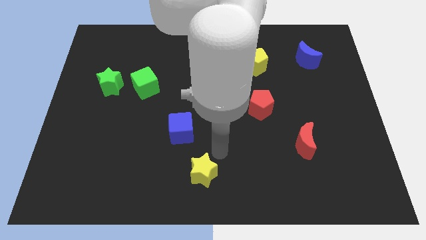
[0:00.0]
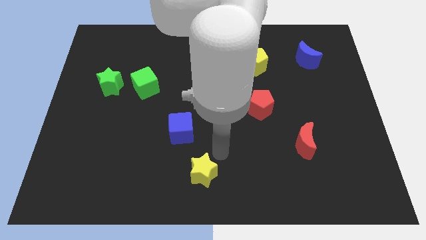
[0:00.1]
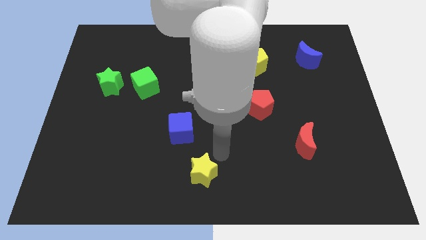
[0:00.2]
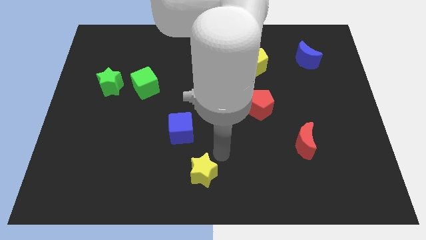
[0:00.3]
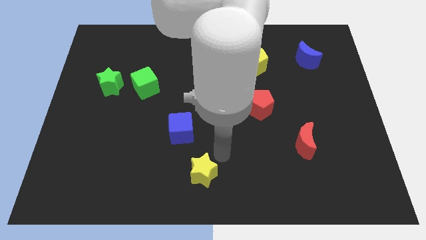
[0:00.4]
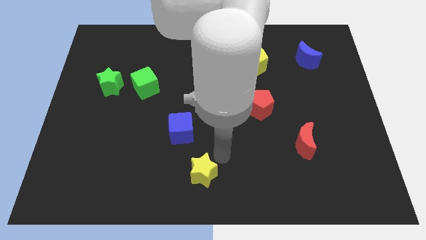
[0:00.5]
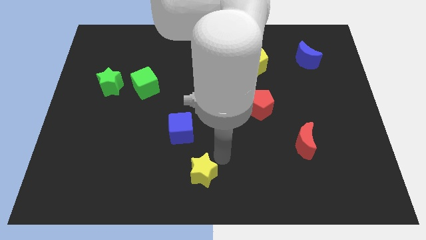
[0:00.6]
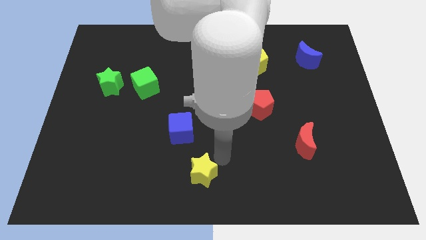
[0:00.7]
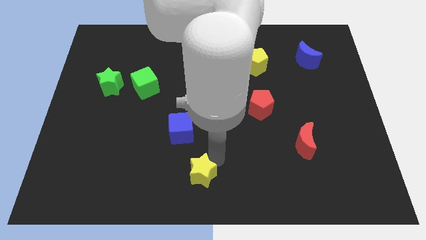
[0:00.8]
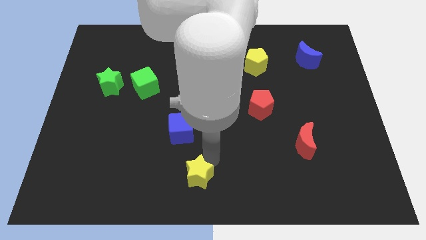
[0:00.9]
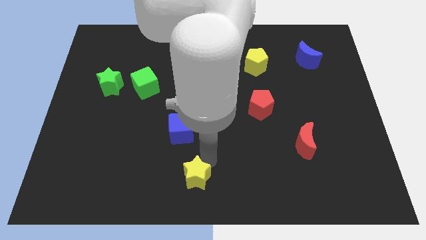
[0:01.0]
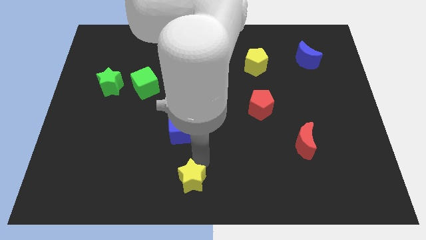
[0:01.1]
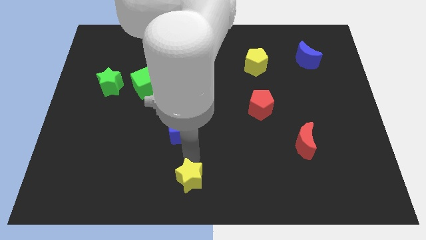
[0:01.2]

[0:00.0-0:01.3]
move yellow star to the bottom of blue cube

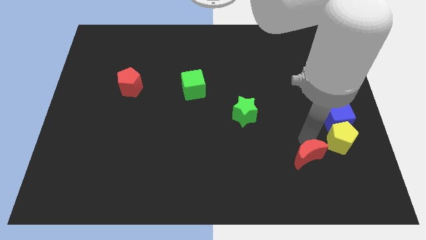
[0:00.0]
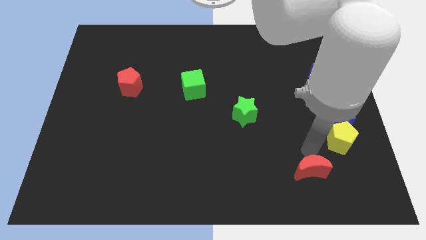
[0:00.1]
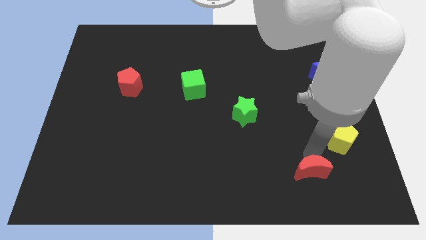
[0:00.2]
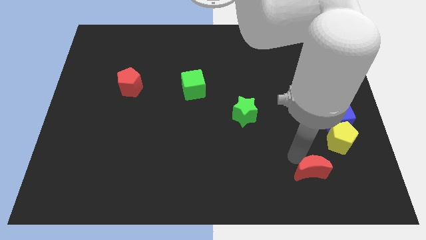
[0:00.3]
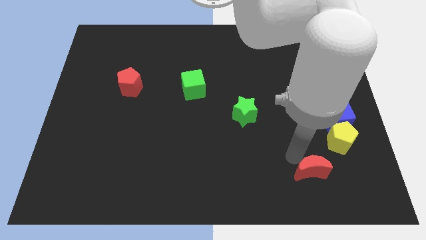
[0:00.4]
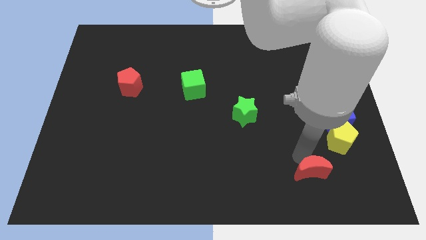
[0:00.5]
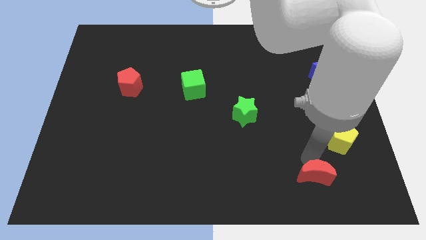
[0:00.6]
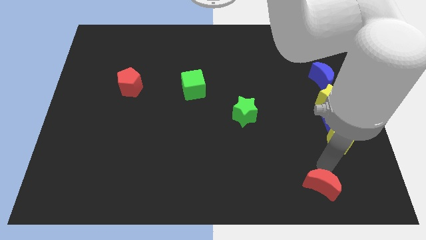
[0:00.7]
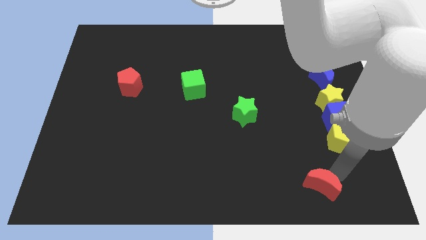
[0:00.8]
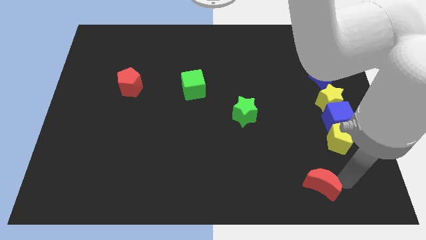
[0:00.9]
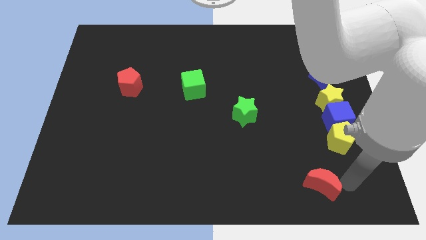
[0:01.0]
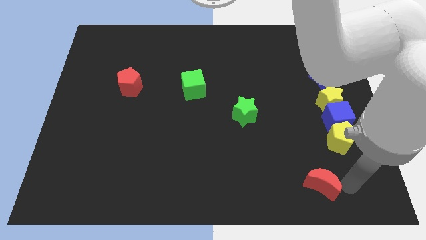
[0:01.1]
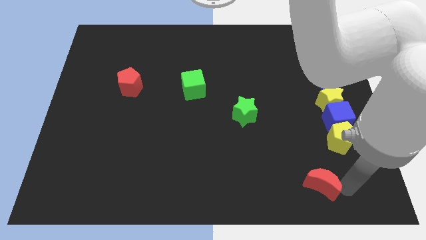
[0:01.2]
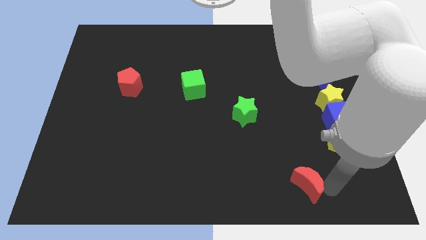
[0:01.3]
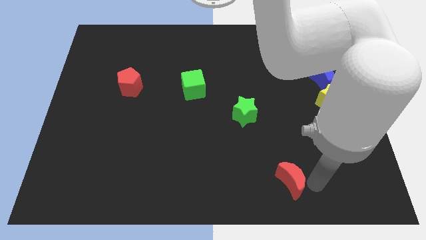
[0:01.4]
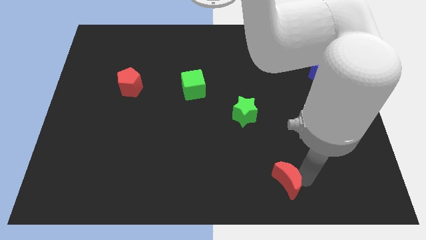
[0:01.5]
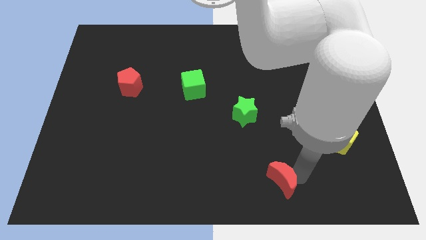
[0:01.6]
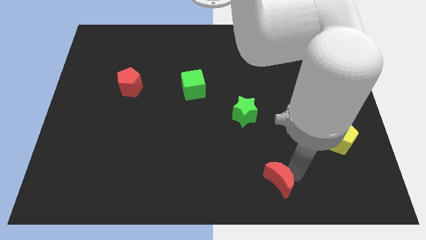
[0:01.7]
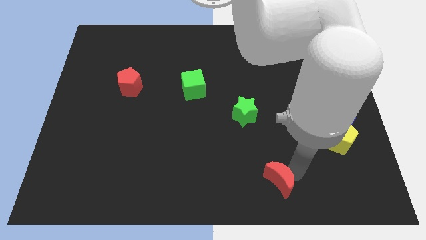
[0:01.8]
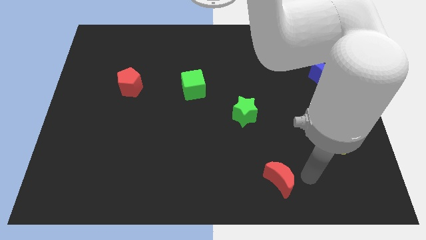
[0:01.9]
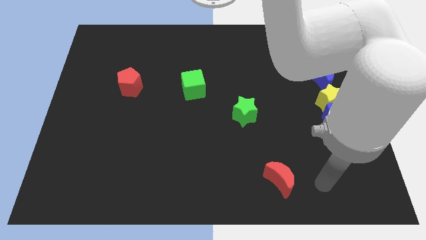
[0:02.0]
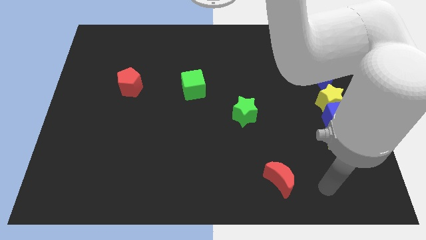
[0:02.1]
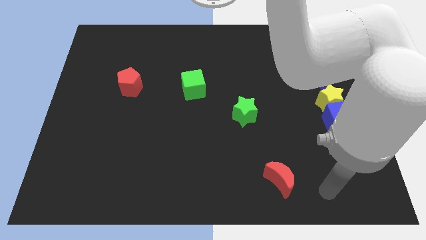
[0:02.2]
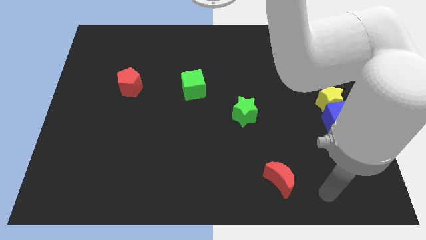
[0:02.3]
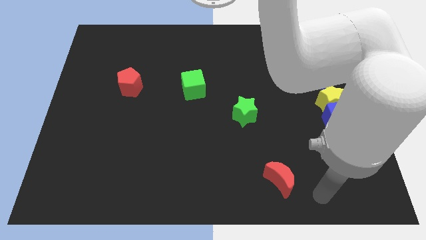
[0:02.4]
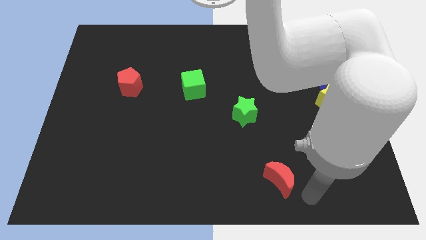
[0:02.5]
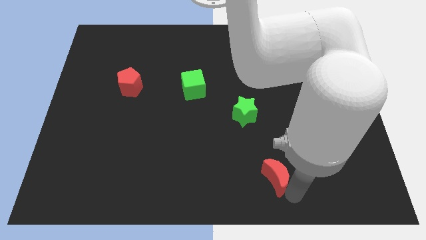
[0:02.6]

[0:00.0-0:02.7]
move the red crescent away from the yellow pentagon

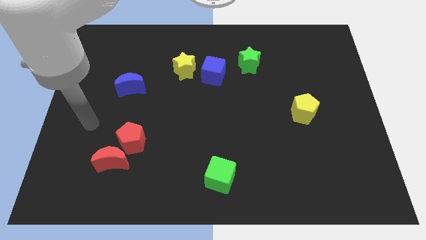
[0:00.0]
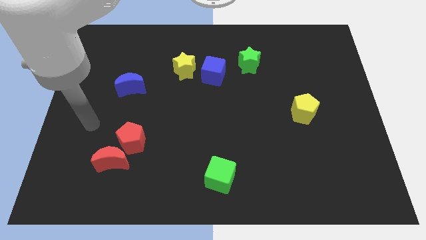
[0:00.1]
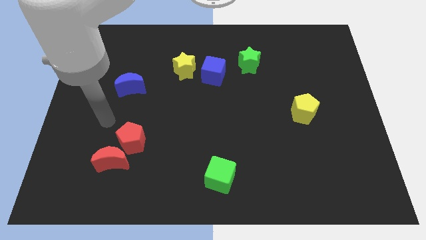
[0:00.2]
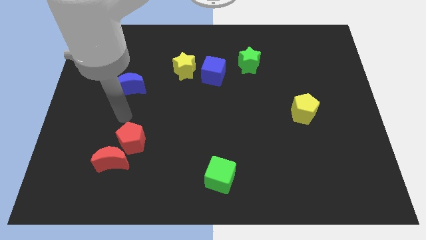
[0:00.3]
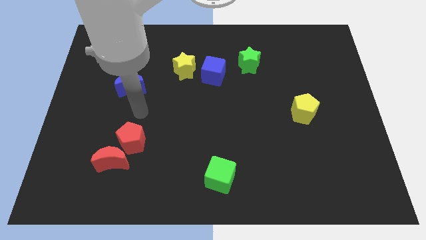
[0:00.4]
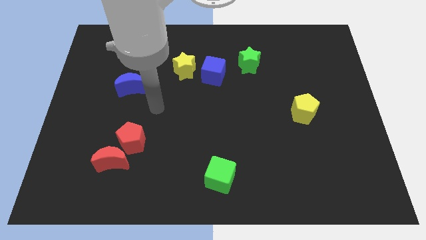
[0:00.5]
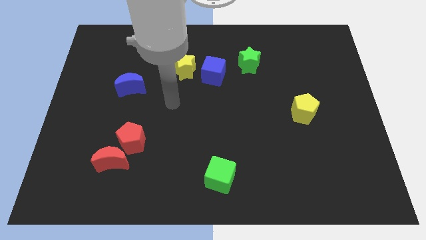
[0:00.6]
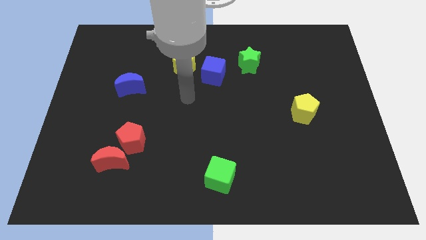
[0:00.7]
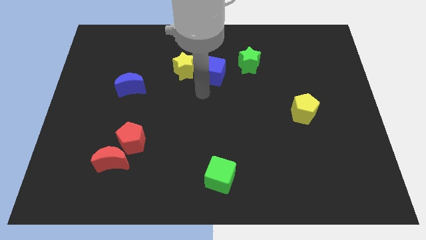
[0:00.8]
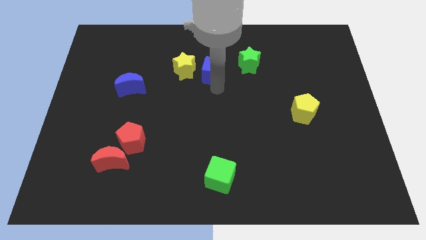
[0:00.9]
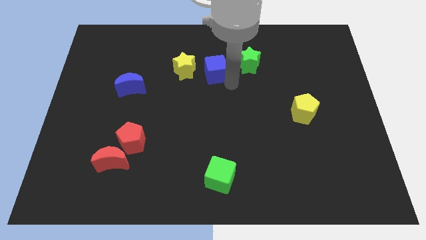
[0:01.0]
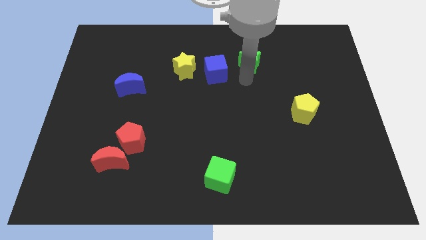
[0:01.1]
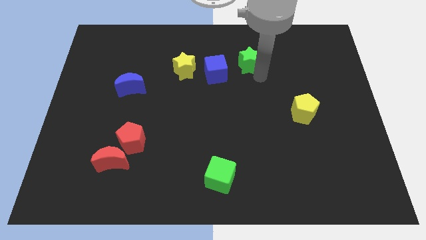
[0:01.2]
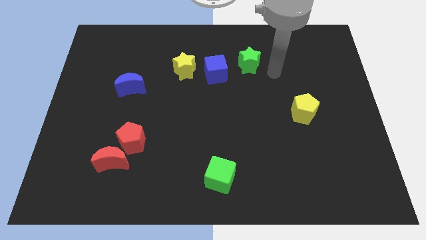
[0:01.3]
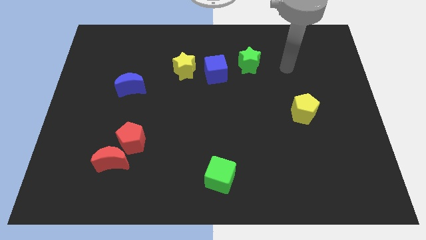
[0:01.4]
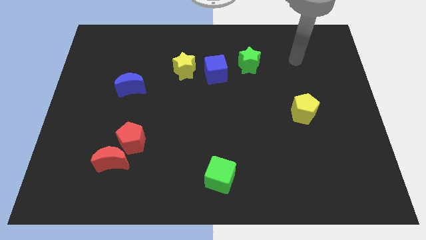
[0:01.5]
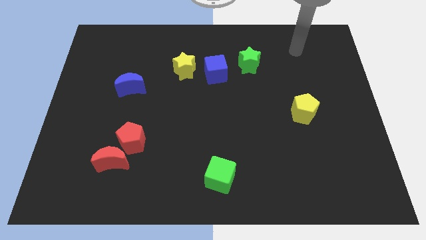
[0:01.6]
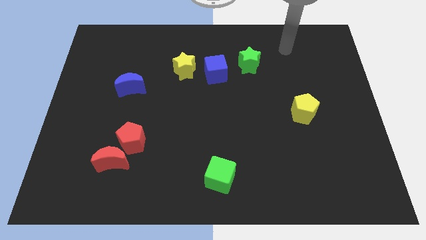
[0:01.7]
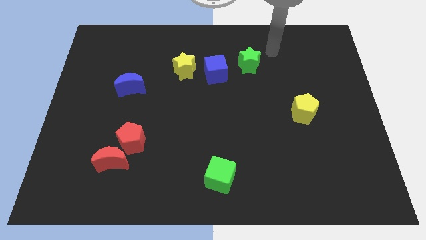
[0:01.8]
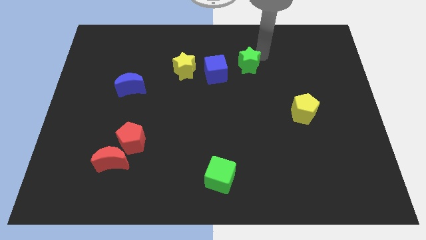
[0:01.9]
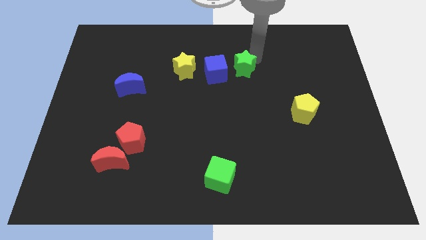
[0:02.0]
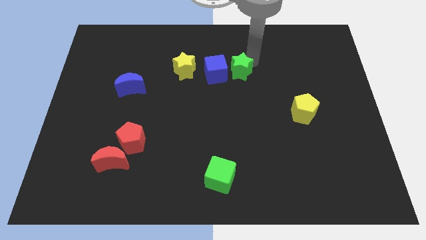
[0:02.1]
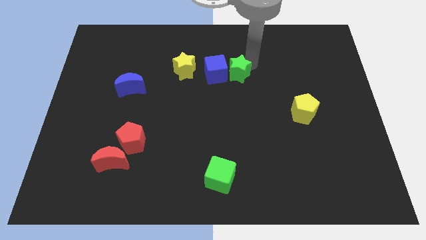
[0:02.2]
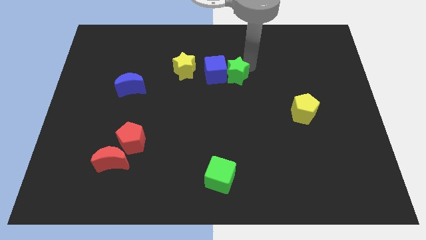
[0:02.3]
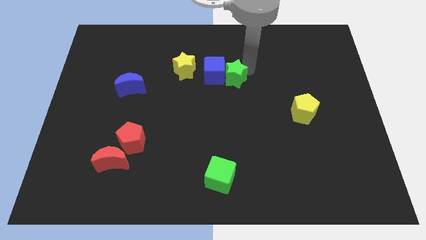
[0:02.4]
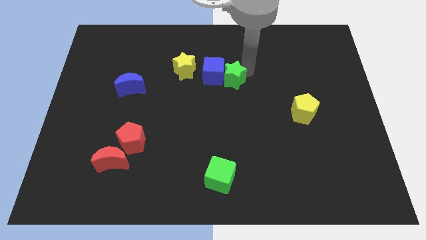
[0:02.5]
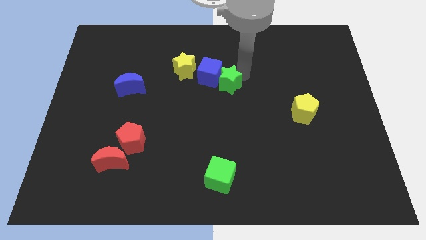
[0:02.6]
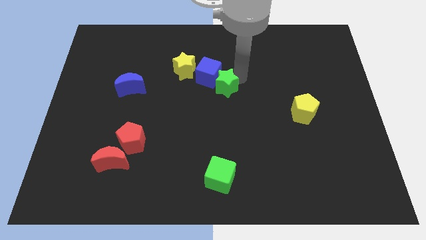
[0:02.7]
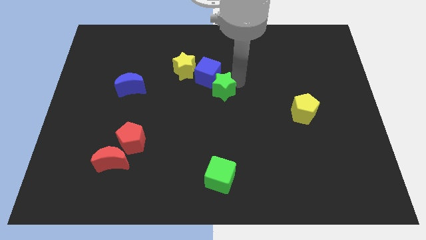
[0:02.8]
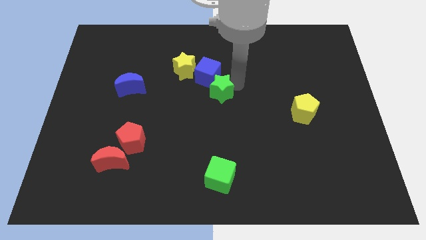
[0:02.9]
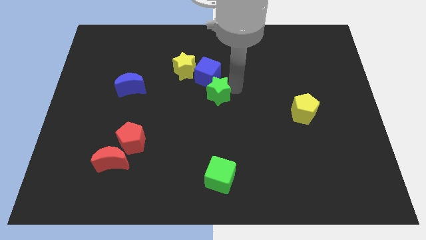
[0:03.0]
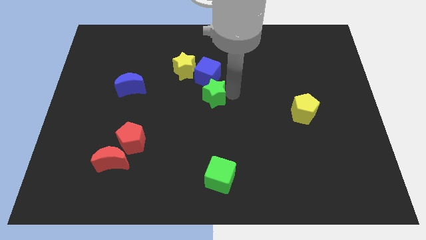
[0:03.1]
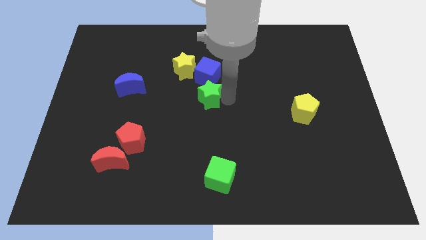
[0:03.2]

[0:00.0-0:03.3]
push the green star slightly downwards

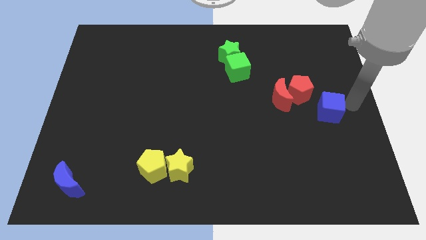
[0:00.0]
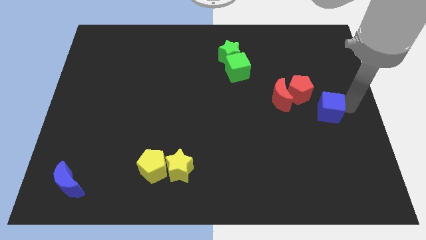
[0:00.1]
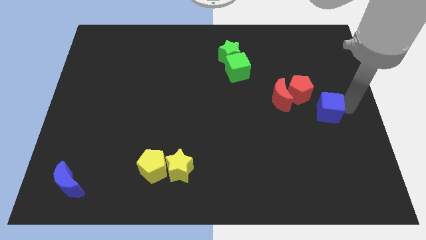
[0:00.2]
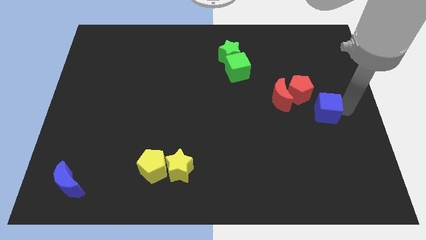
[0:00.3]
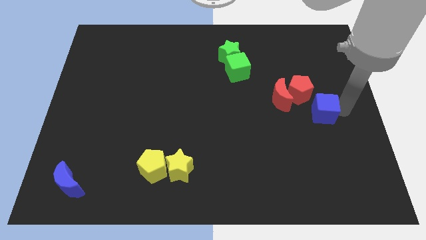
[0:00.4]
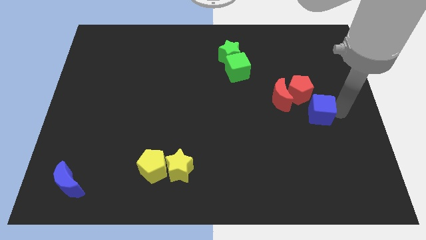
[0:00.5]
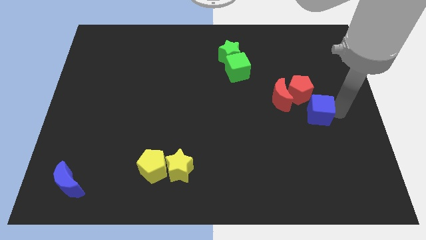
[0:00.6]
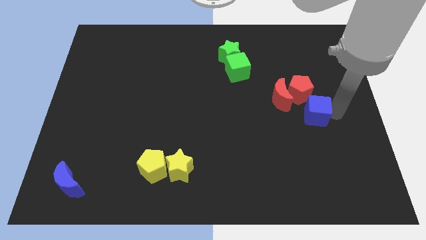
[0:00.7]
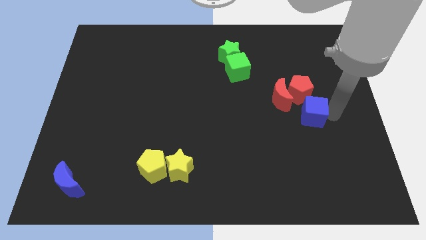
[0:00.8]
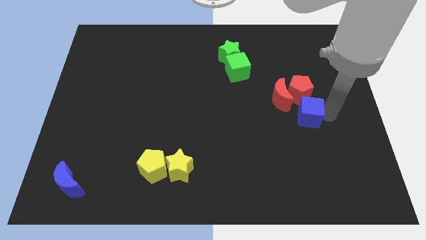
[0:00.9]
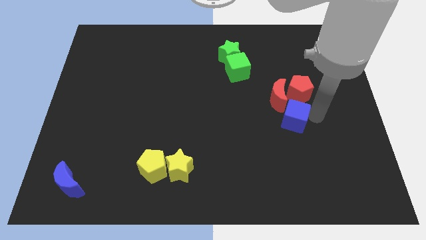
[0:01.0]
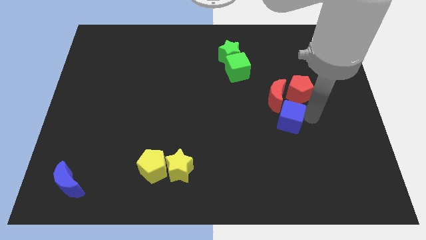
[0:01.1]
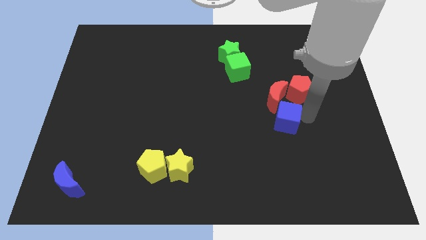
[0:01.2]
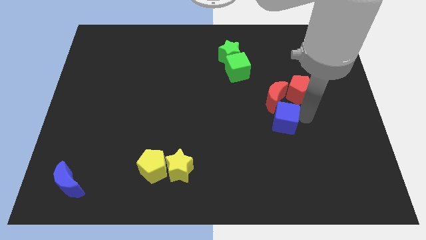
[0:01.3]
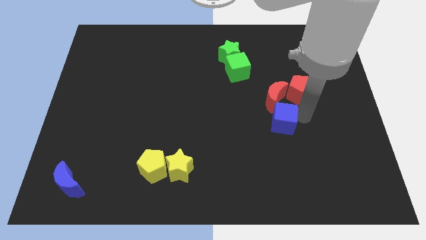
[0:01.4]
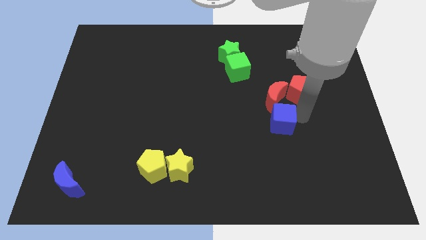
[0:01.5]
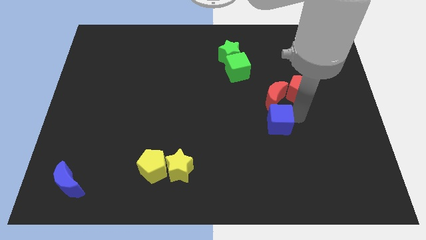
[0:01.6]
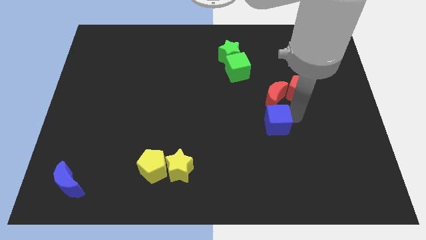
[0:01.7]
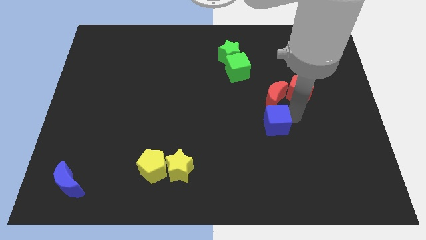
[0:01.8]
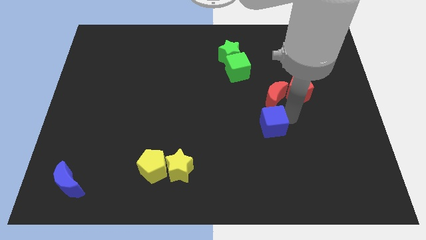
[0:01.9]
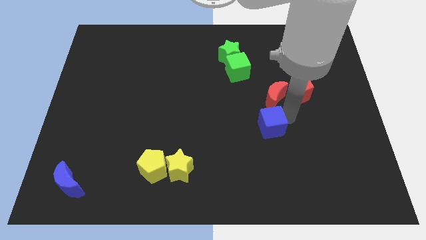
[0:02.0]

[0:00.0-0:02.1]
place the blue cube below the red crescent
